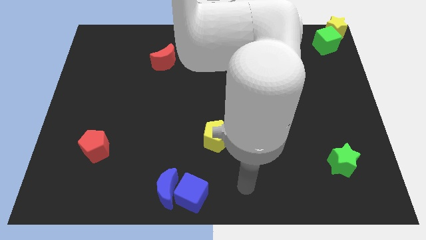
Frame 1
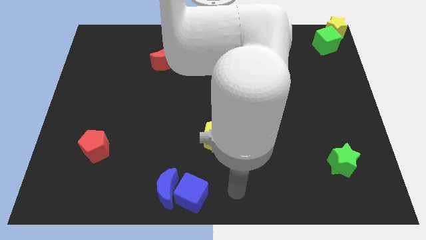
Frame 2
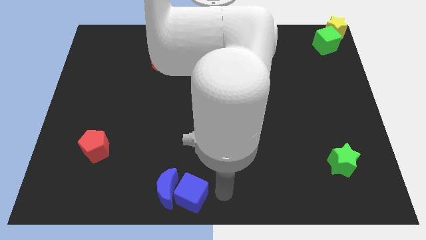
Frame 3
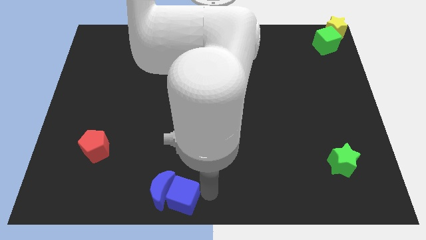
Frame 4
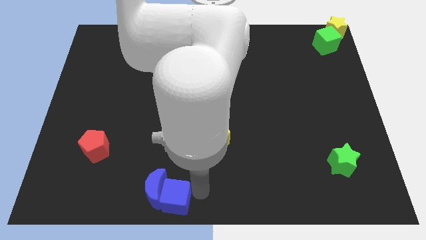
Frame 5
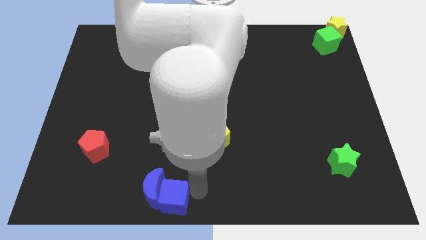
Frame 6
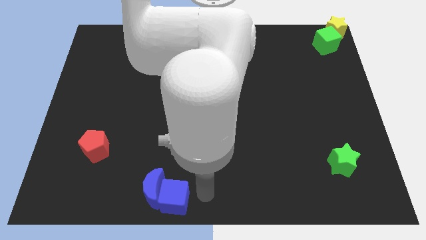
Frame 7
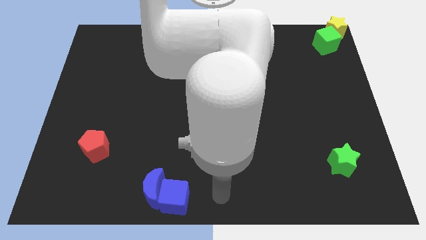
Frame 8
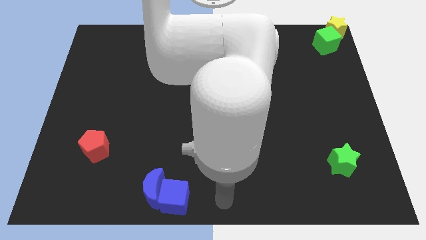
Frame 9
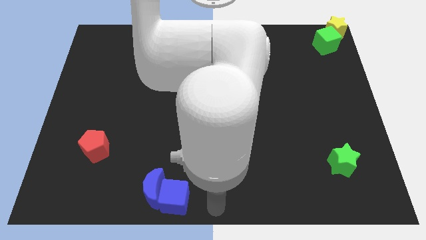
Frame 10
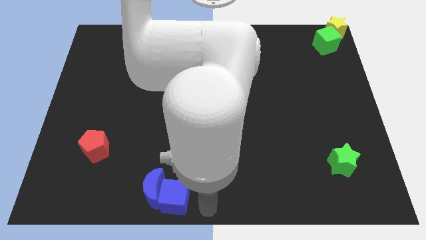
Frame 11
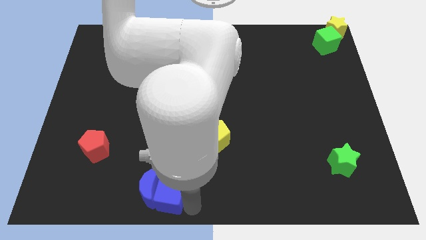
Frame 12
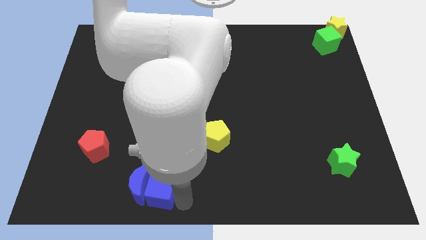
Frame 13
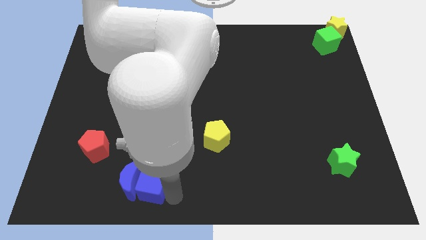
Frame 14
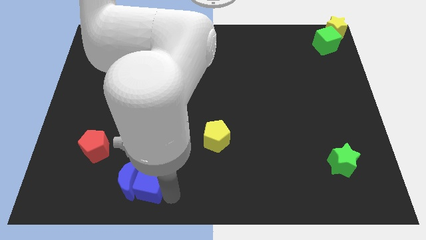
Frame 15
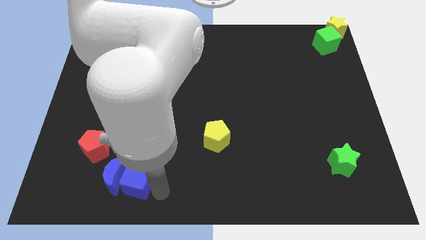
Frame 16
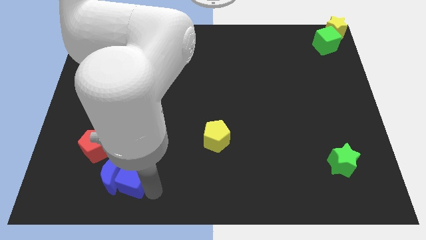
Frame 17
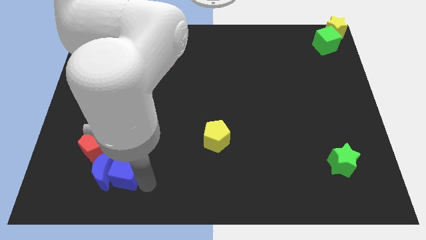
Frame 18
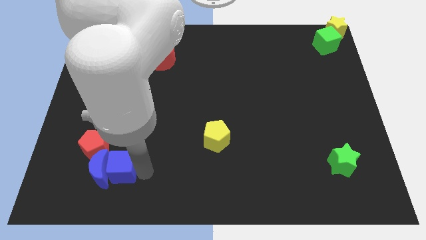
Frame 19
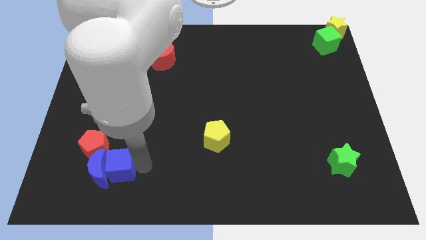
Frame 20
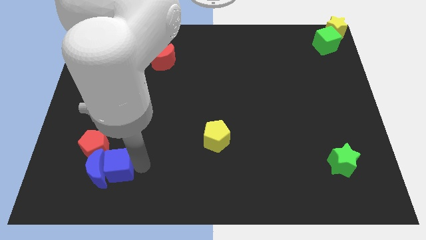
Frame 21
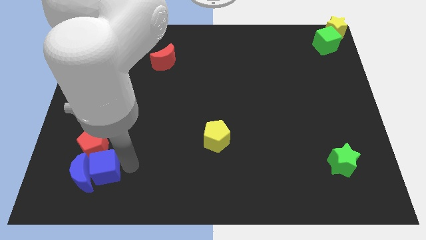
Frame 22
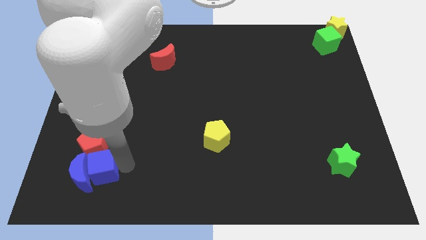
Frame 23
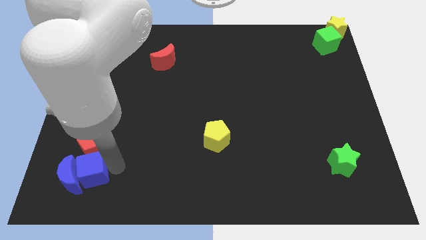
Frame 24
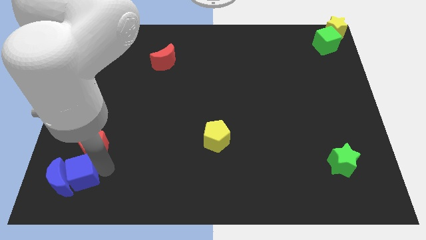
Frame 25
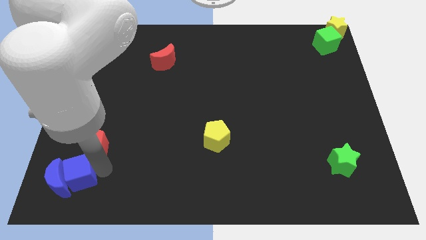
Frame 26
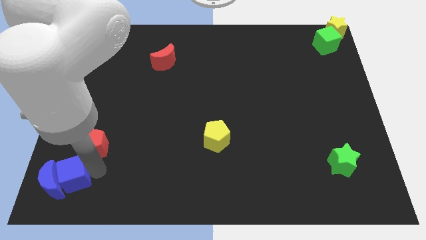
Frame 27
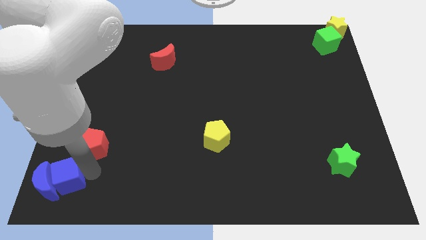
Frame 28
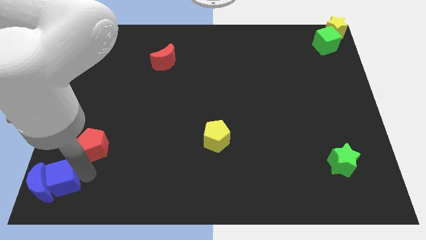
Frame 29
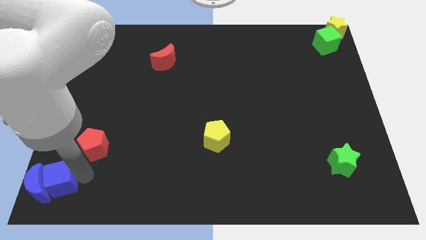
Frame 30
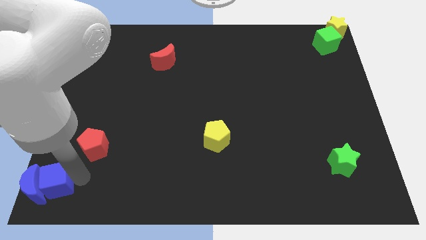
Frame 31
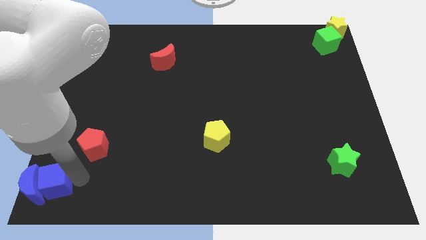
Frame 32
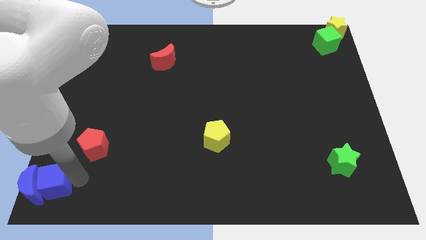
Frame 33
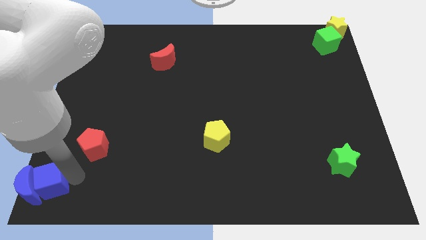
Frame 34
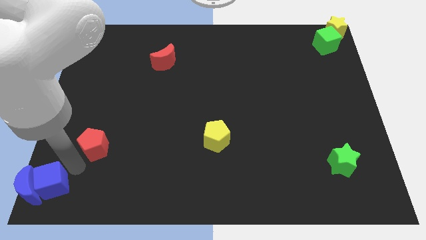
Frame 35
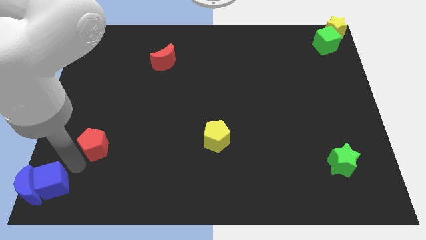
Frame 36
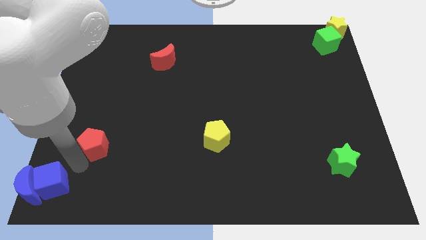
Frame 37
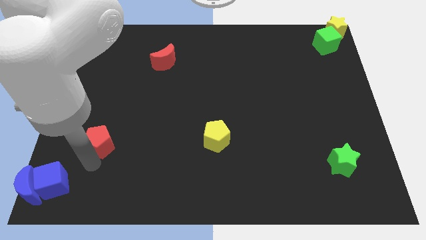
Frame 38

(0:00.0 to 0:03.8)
move the blue crescent to the bottom left side of the board along with the blue cube

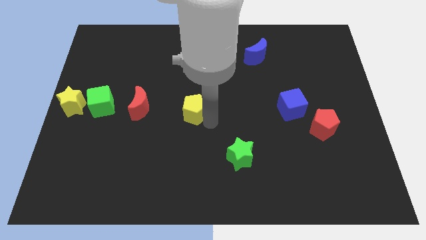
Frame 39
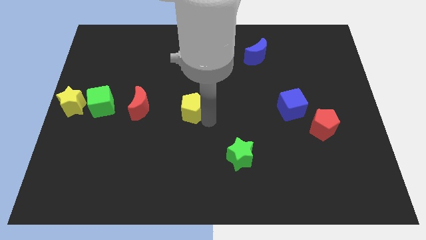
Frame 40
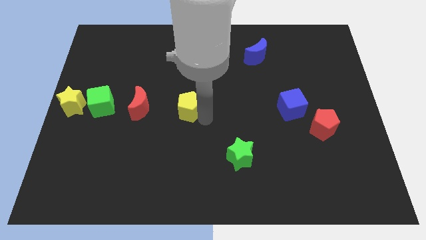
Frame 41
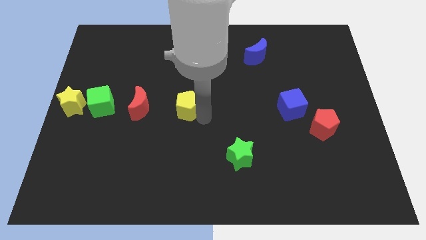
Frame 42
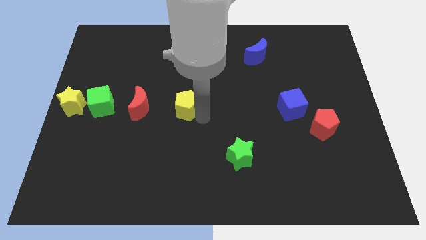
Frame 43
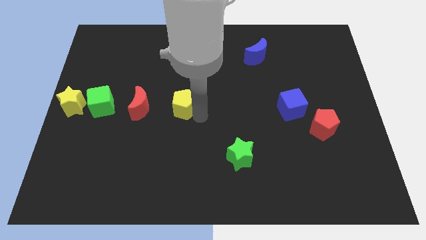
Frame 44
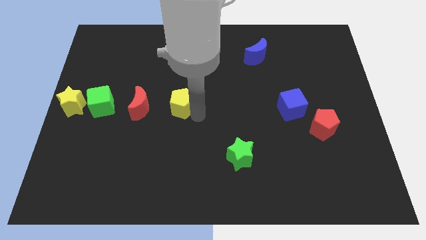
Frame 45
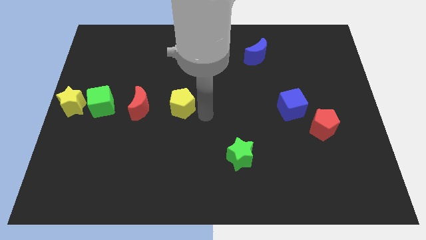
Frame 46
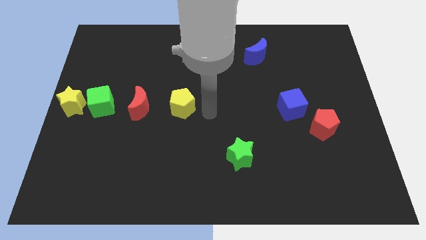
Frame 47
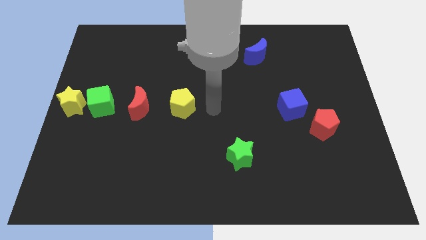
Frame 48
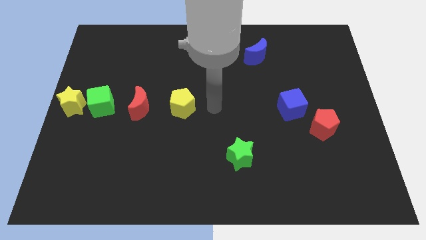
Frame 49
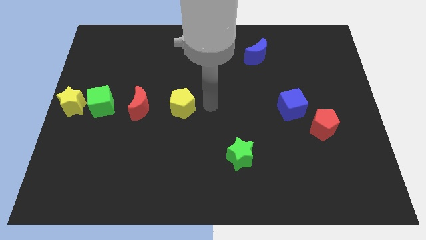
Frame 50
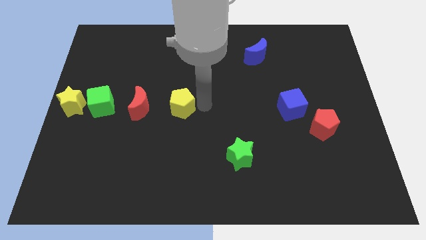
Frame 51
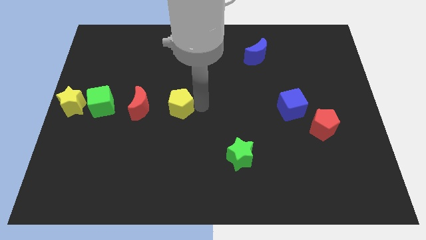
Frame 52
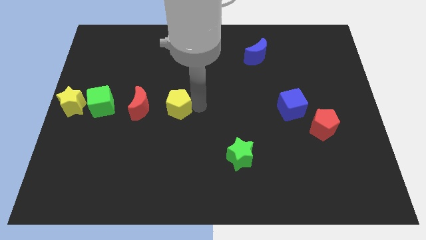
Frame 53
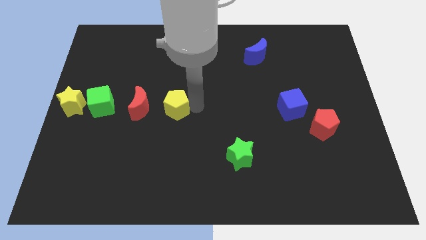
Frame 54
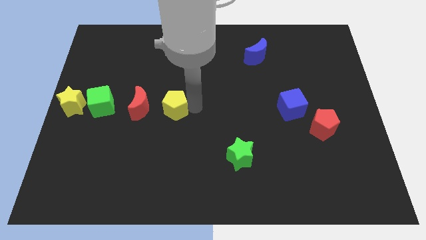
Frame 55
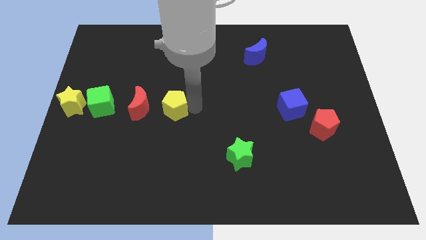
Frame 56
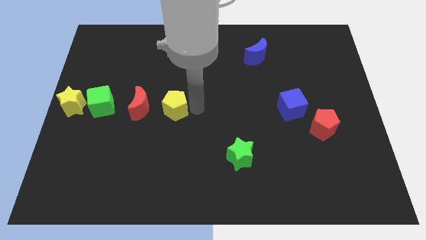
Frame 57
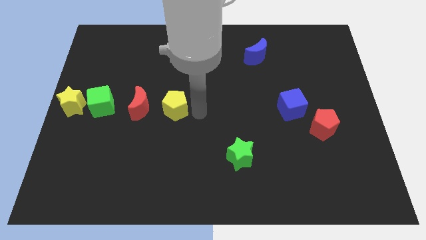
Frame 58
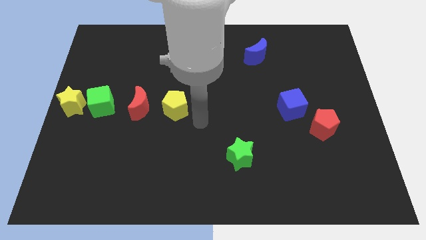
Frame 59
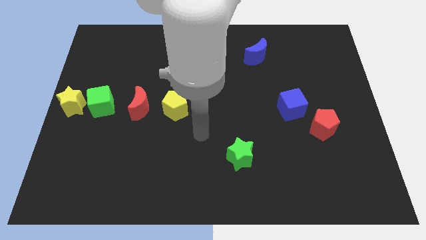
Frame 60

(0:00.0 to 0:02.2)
move the yellow pentagon close to the red crescent

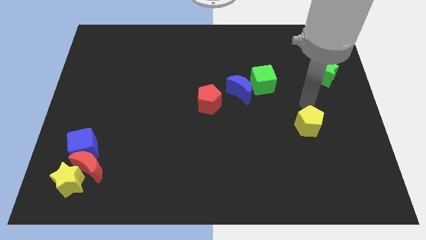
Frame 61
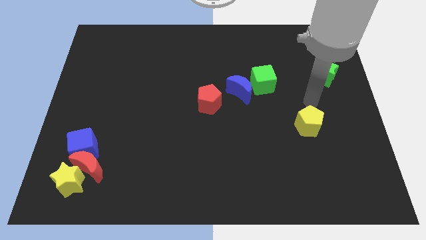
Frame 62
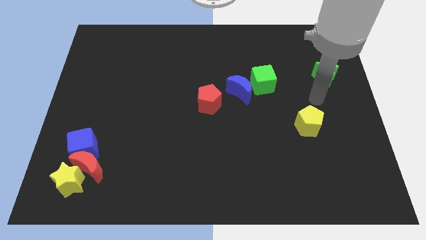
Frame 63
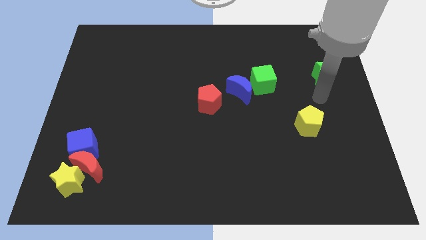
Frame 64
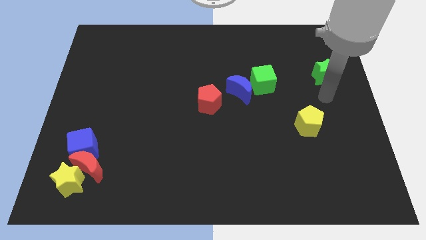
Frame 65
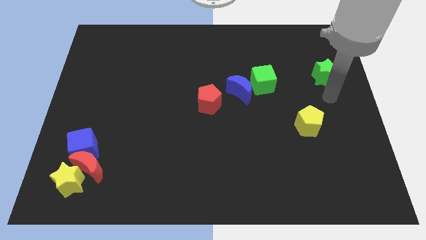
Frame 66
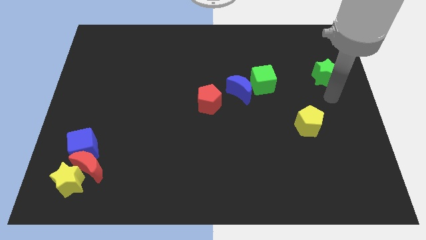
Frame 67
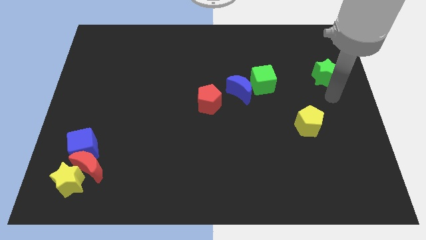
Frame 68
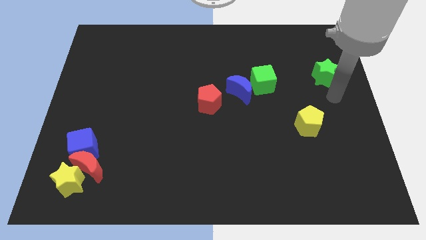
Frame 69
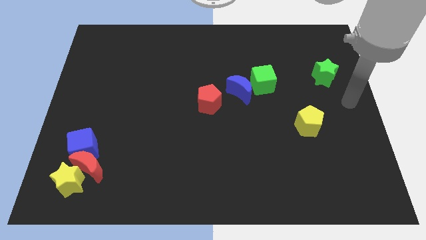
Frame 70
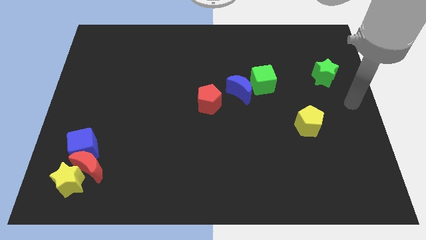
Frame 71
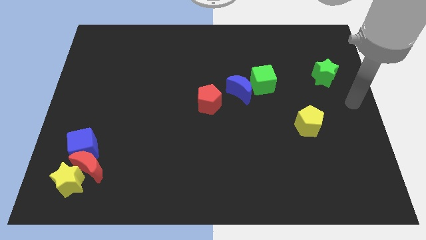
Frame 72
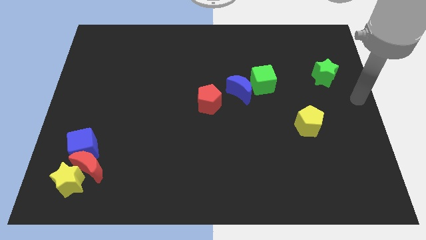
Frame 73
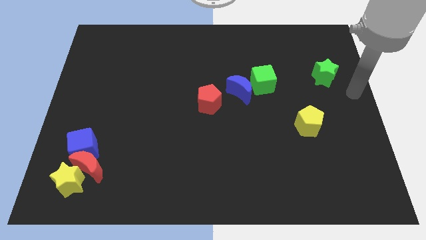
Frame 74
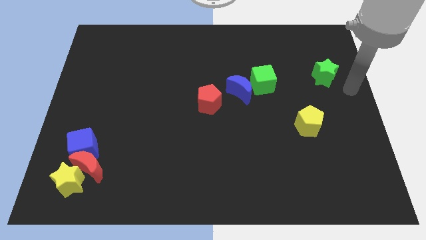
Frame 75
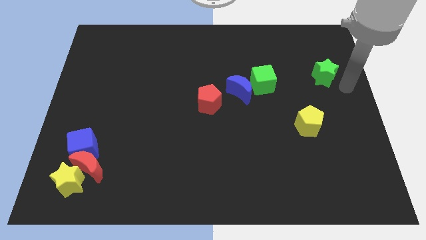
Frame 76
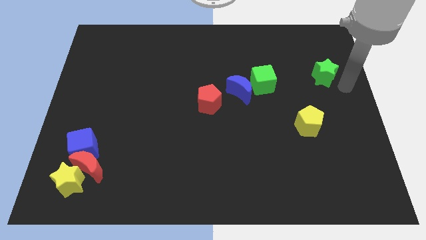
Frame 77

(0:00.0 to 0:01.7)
place your arm at the right of the green star

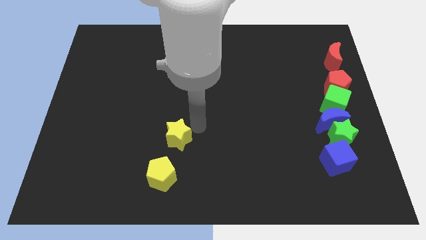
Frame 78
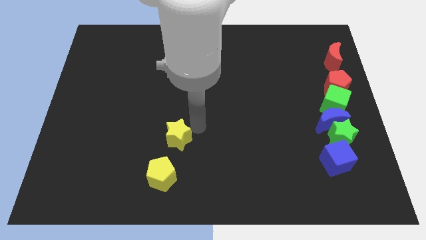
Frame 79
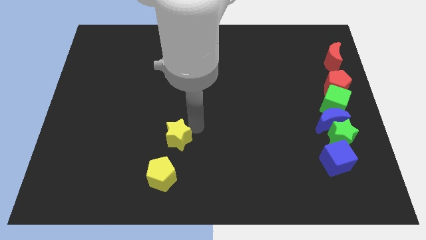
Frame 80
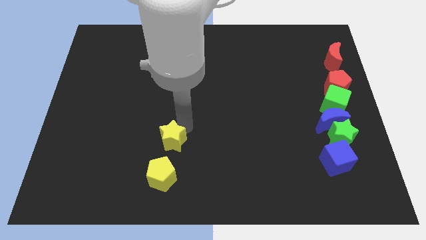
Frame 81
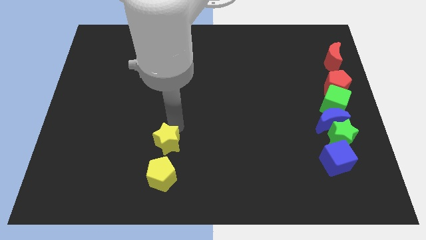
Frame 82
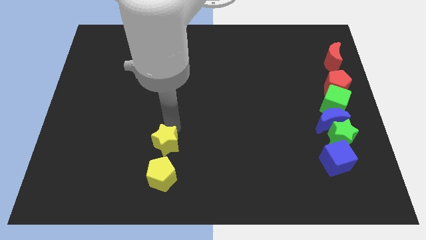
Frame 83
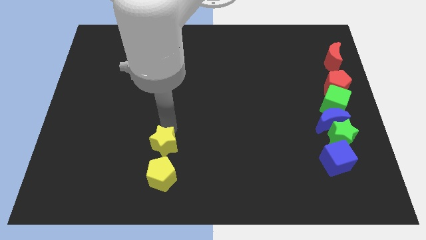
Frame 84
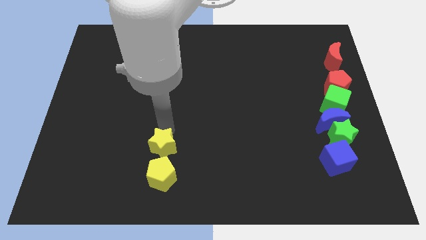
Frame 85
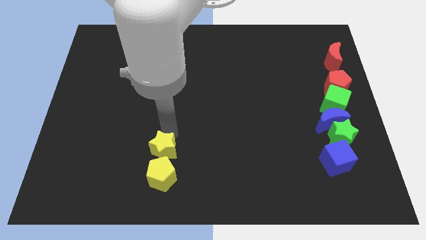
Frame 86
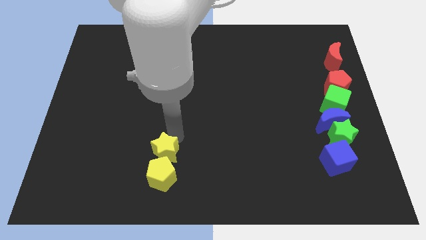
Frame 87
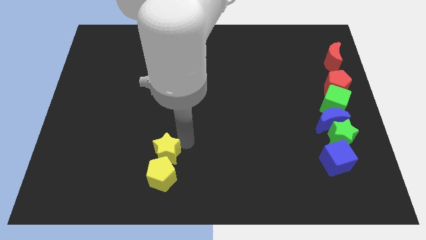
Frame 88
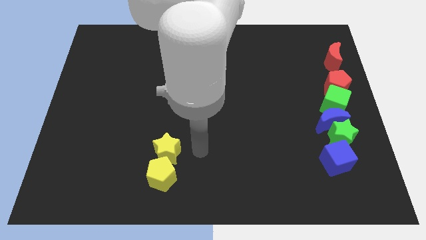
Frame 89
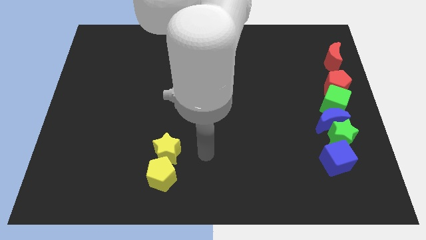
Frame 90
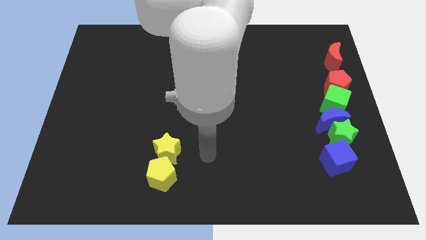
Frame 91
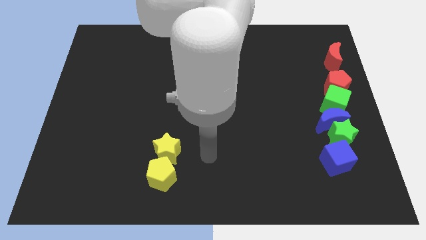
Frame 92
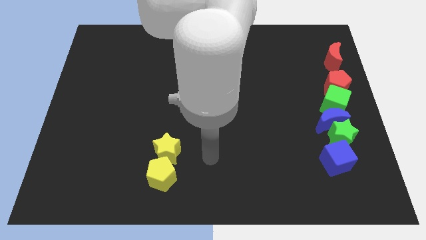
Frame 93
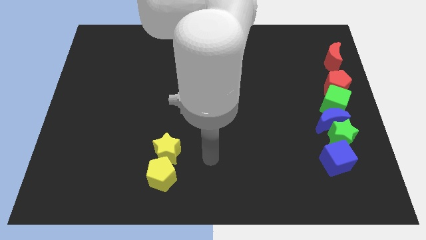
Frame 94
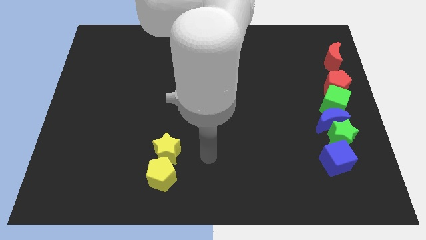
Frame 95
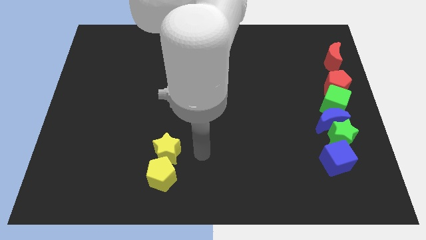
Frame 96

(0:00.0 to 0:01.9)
slide the yellow star close to the yellow pentagon
